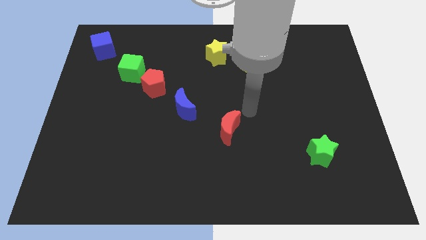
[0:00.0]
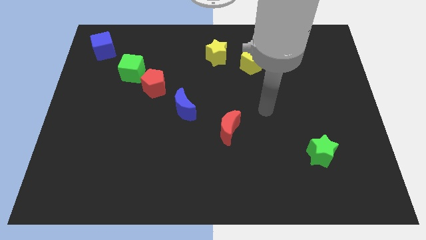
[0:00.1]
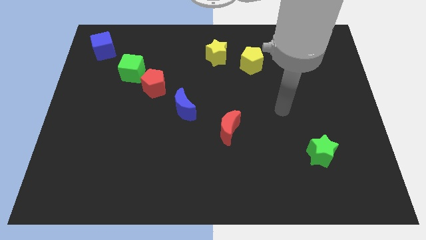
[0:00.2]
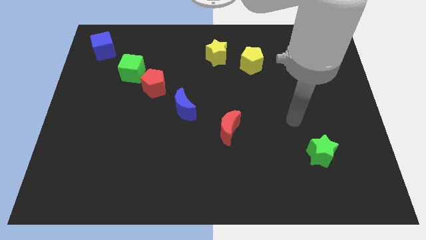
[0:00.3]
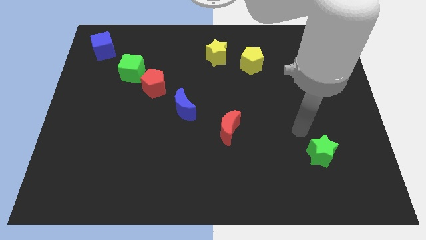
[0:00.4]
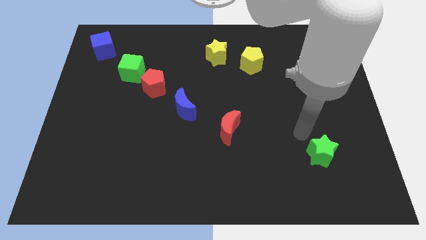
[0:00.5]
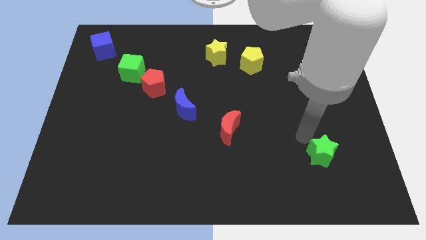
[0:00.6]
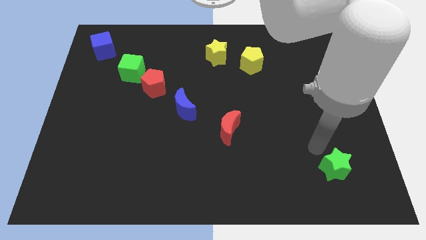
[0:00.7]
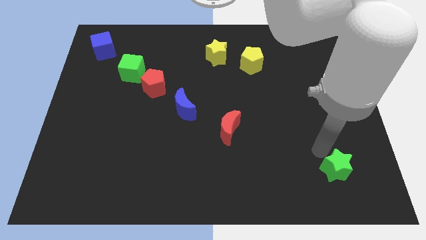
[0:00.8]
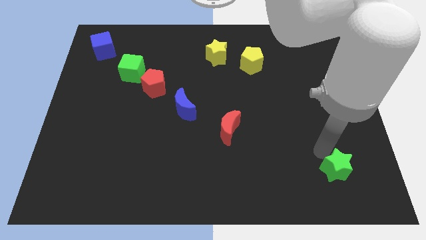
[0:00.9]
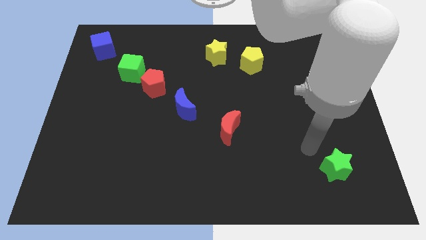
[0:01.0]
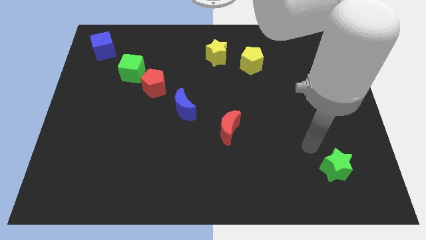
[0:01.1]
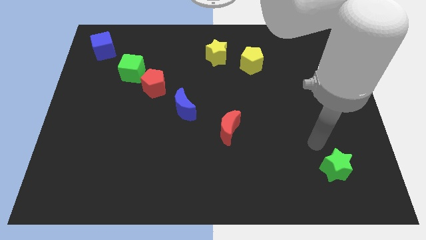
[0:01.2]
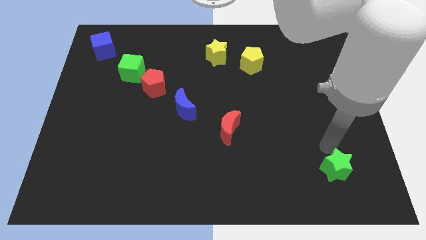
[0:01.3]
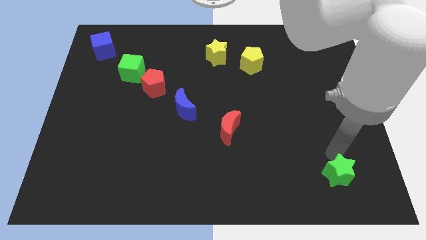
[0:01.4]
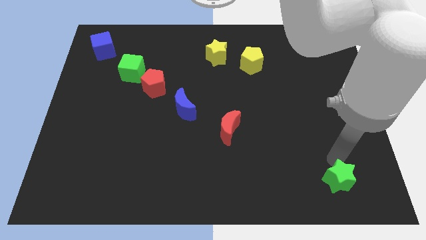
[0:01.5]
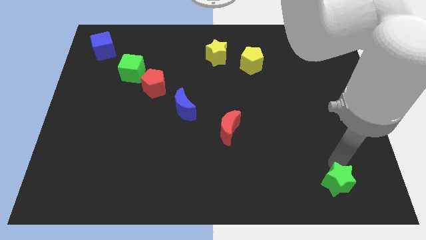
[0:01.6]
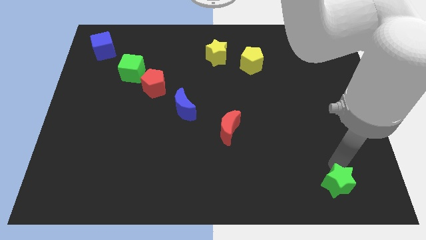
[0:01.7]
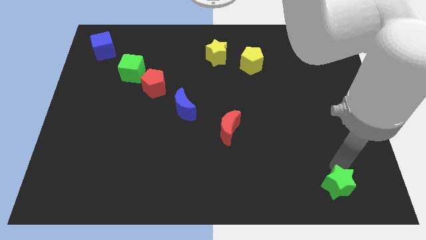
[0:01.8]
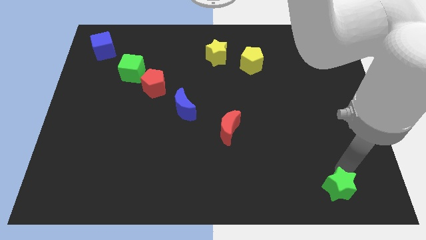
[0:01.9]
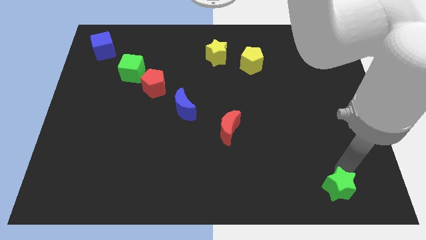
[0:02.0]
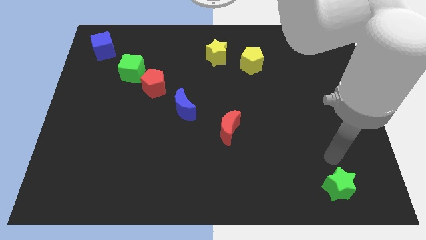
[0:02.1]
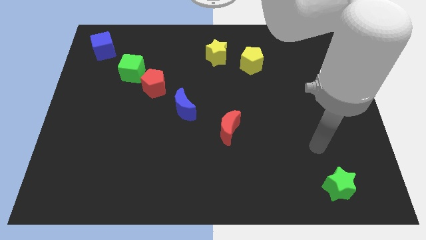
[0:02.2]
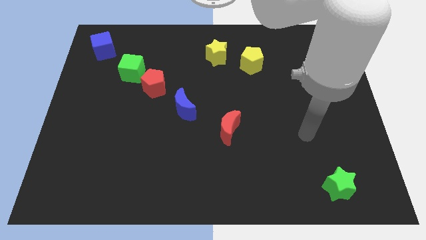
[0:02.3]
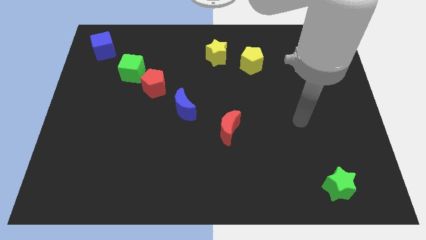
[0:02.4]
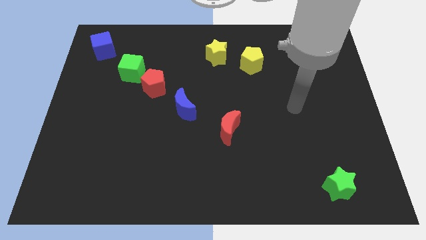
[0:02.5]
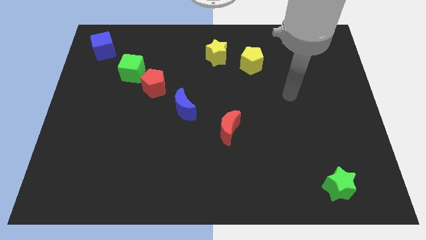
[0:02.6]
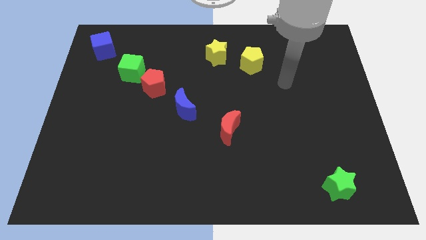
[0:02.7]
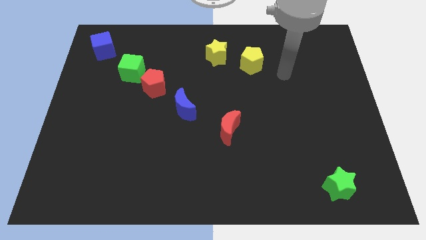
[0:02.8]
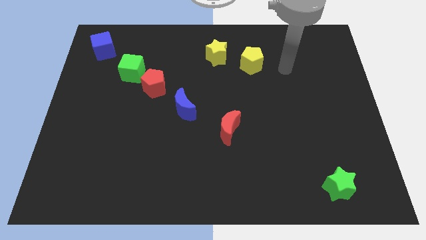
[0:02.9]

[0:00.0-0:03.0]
move the green star to the bottom of the board

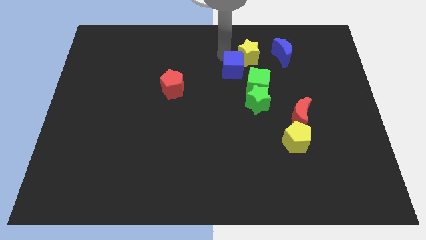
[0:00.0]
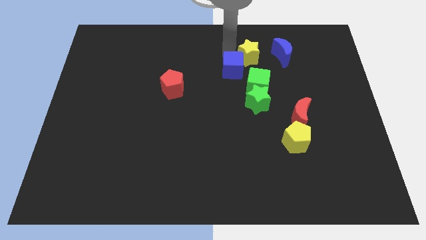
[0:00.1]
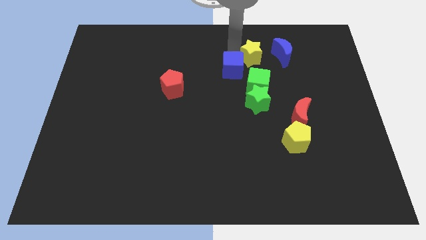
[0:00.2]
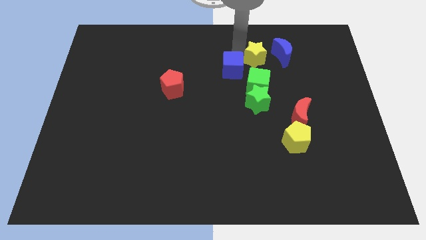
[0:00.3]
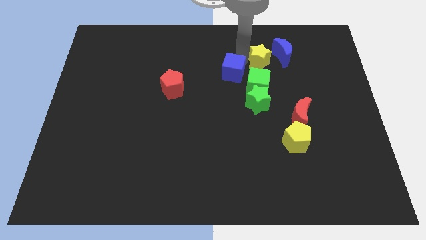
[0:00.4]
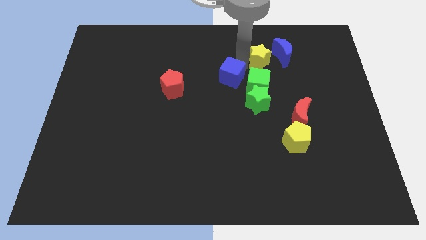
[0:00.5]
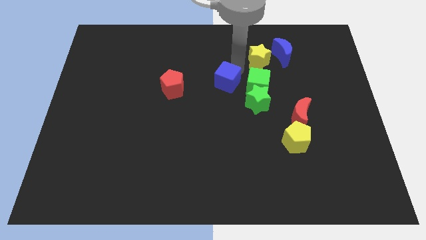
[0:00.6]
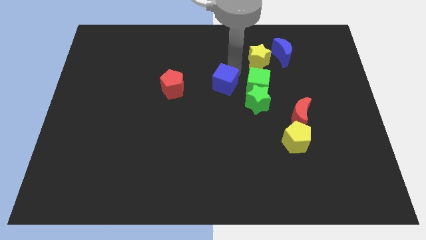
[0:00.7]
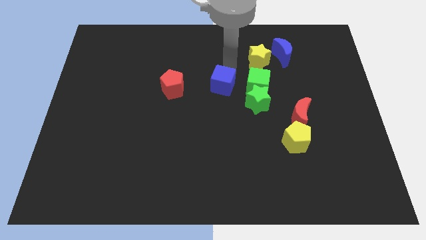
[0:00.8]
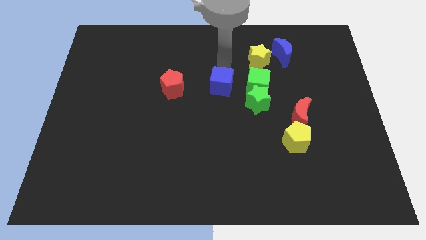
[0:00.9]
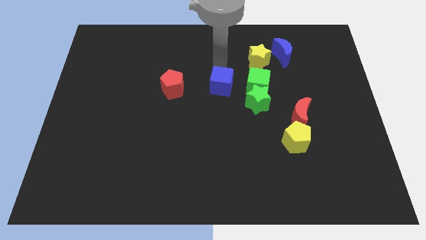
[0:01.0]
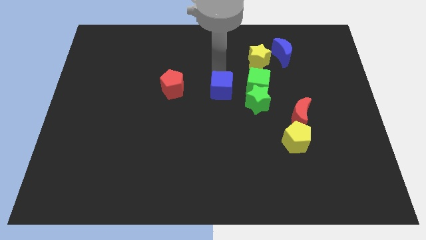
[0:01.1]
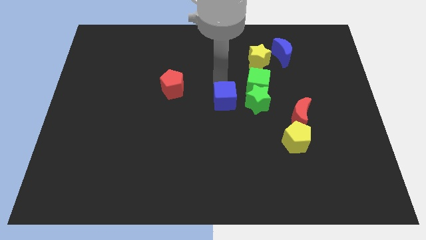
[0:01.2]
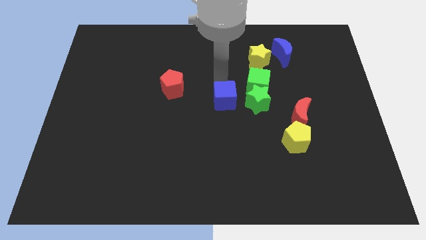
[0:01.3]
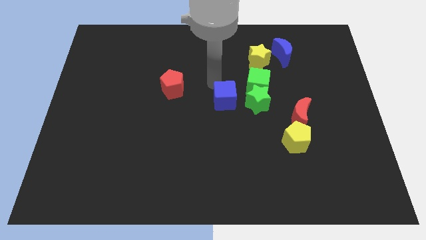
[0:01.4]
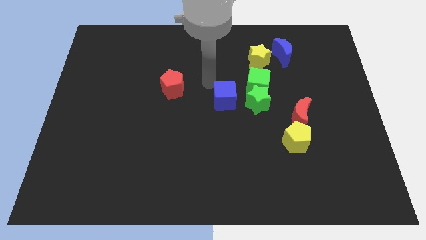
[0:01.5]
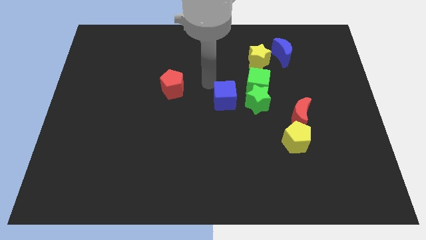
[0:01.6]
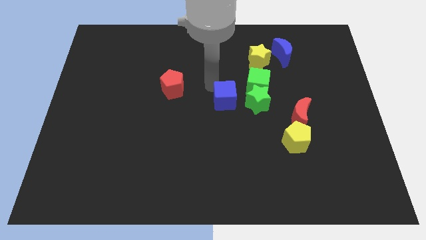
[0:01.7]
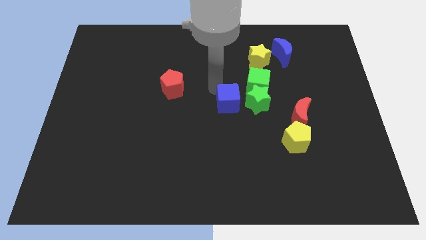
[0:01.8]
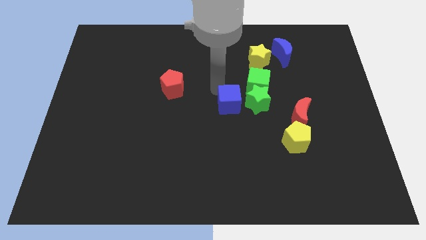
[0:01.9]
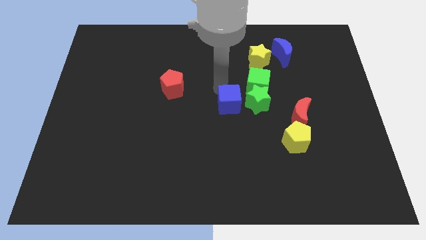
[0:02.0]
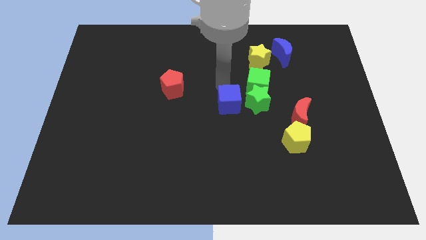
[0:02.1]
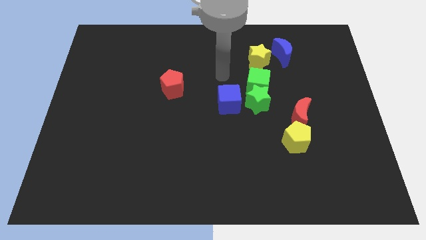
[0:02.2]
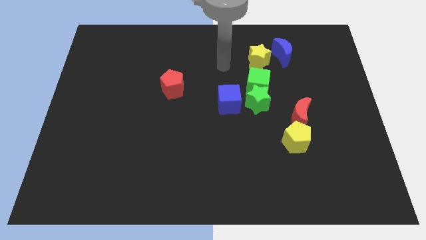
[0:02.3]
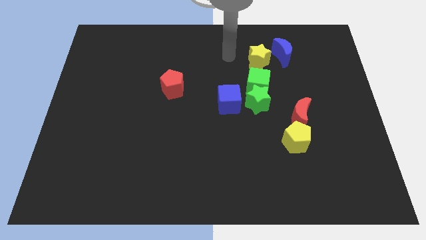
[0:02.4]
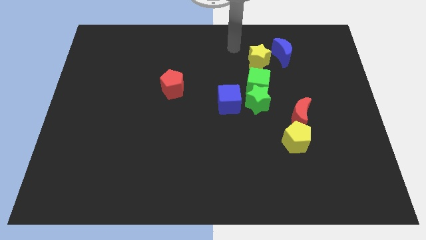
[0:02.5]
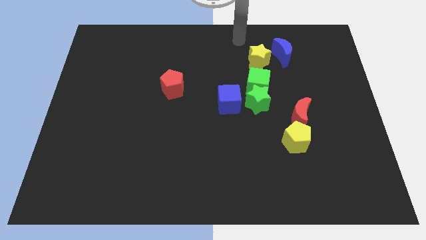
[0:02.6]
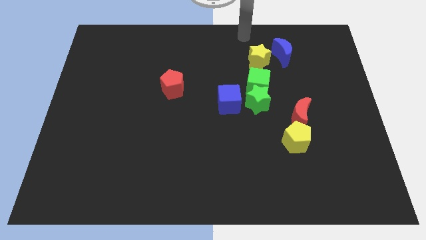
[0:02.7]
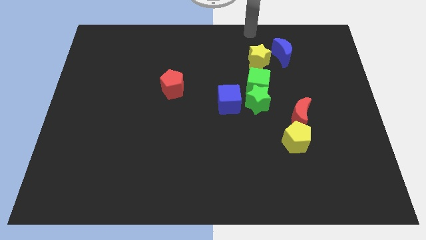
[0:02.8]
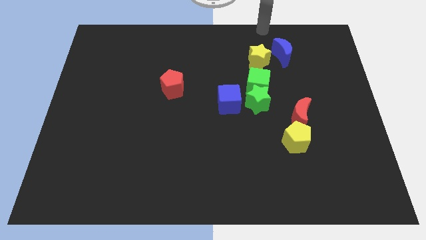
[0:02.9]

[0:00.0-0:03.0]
move the blue cube to the left side of the green star

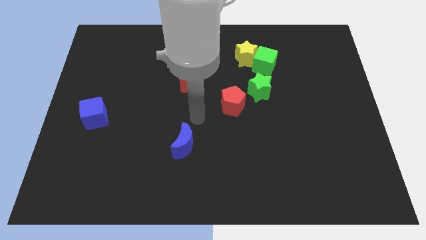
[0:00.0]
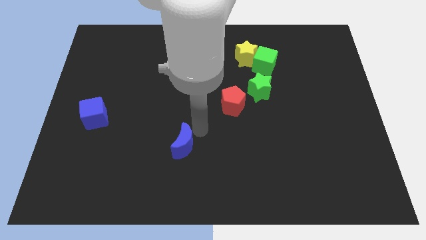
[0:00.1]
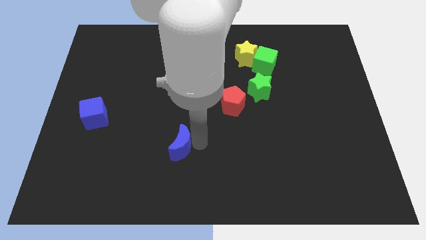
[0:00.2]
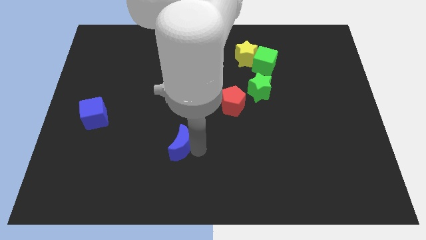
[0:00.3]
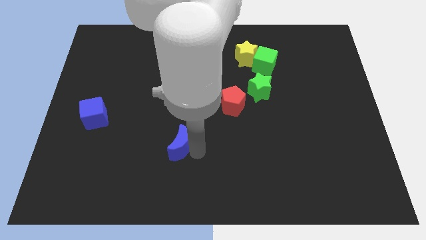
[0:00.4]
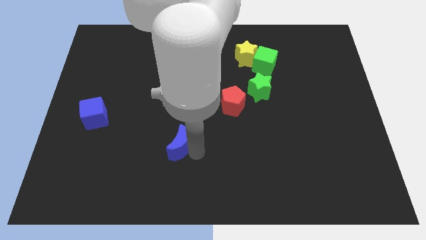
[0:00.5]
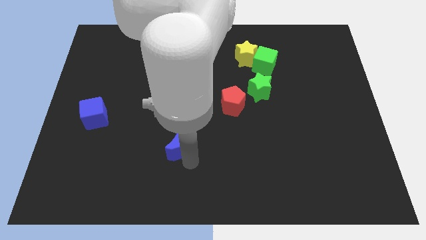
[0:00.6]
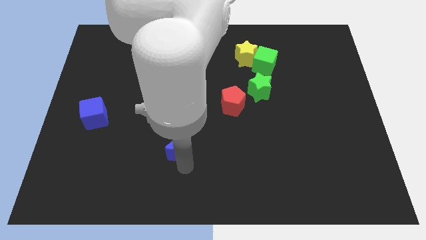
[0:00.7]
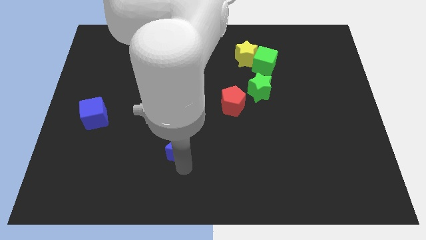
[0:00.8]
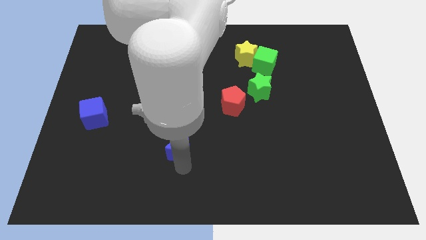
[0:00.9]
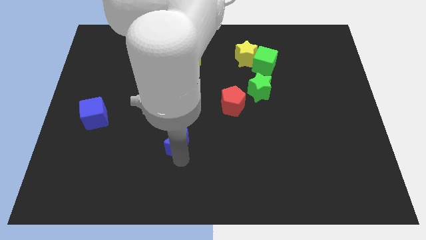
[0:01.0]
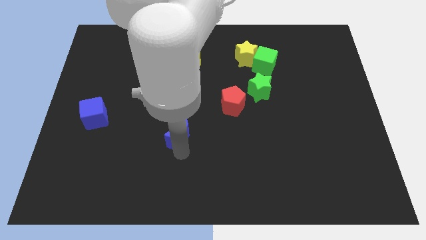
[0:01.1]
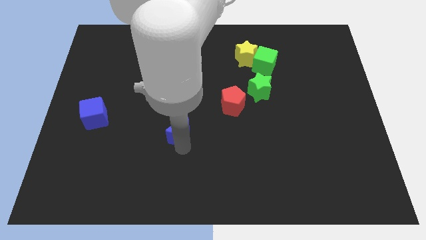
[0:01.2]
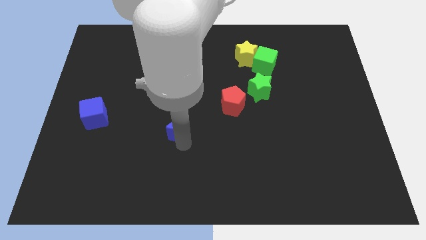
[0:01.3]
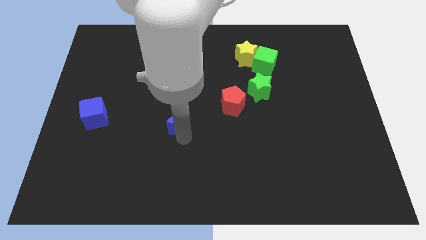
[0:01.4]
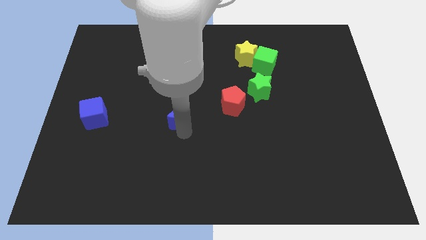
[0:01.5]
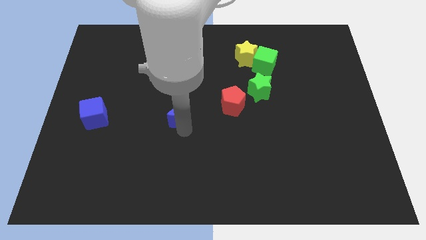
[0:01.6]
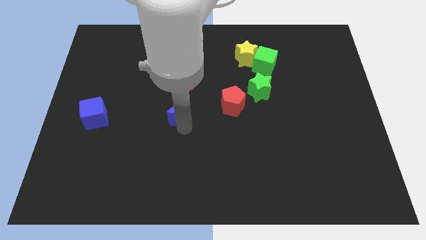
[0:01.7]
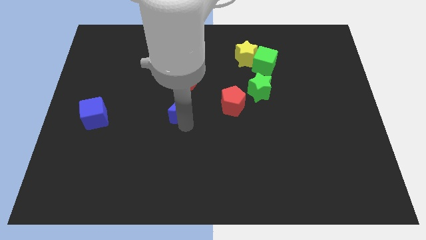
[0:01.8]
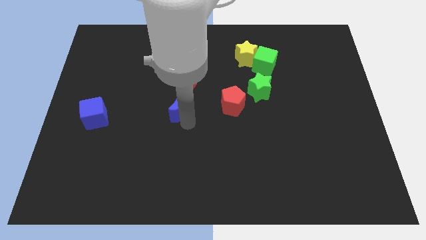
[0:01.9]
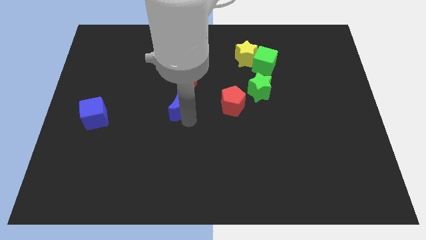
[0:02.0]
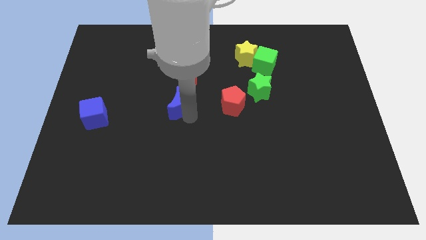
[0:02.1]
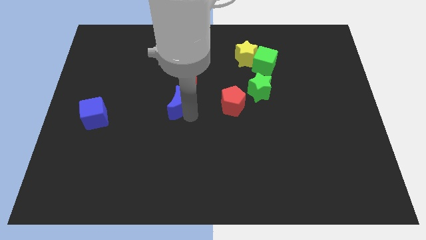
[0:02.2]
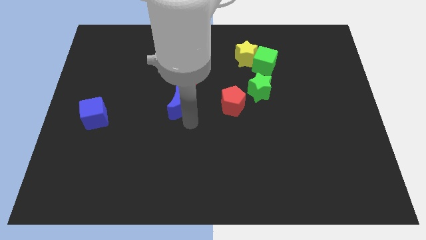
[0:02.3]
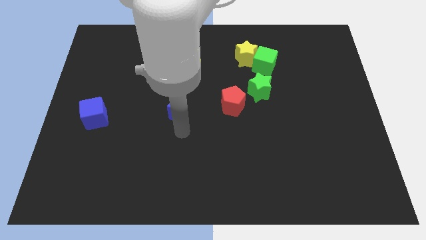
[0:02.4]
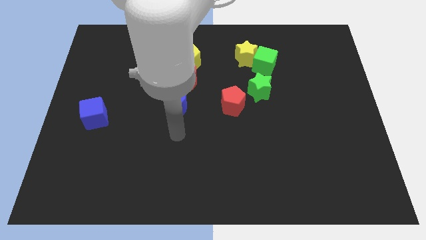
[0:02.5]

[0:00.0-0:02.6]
move the blue moon vertically below the red moon to form a horizontal line

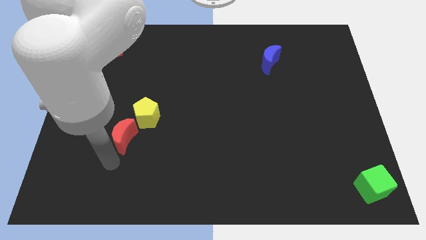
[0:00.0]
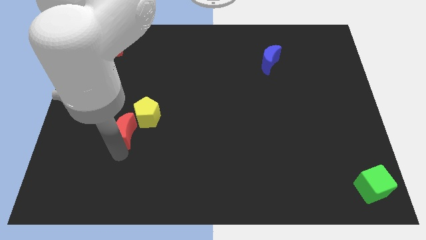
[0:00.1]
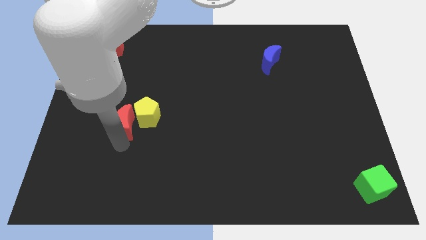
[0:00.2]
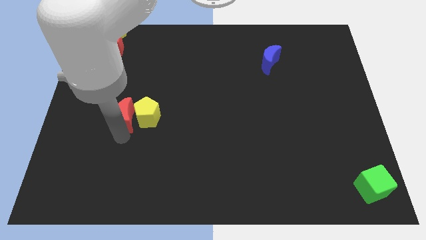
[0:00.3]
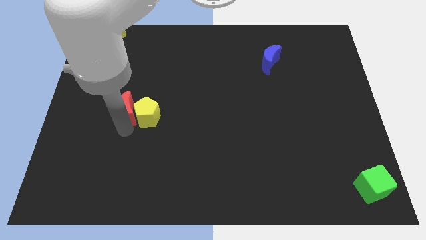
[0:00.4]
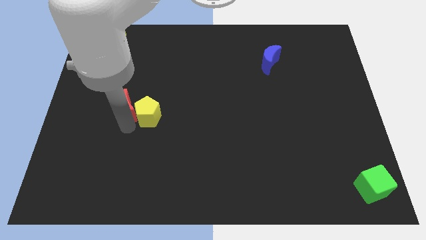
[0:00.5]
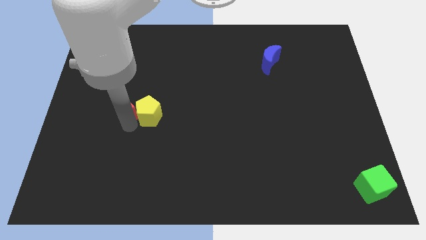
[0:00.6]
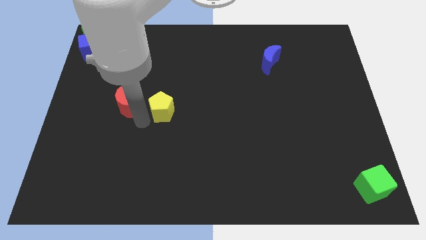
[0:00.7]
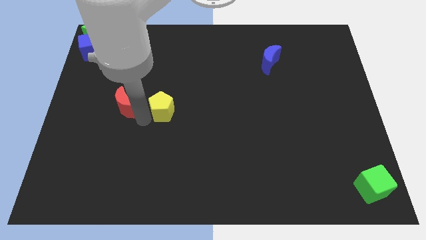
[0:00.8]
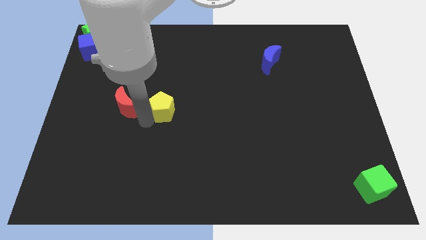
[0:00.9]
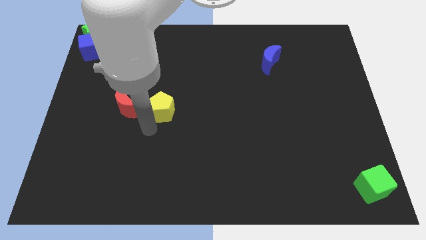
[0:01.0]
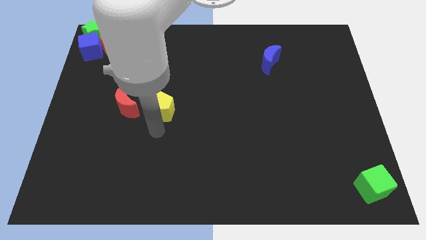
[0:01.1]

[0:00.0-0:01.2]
separate the yellow pentagon and the red crescent
